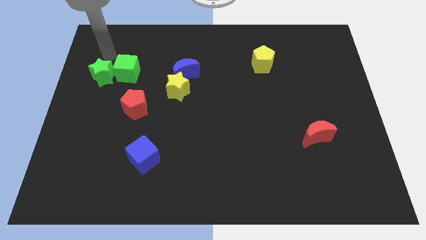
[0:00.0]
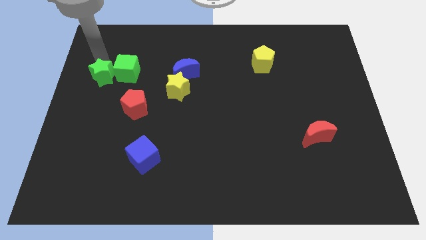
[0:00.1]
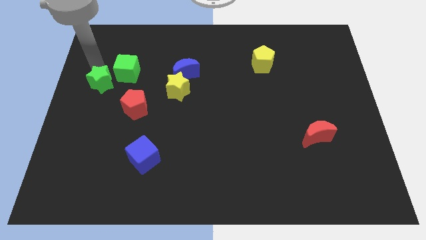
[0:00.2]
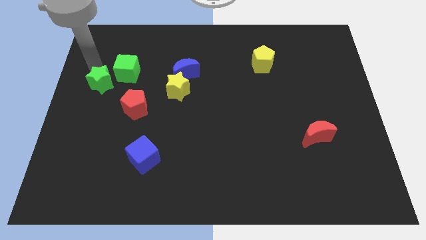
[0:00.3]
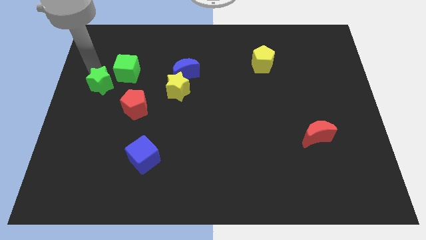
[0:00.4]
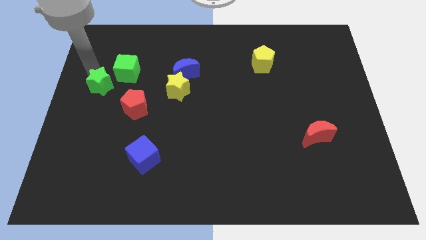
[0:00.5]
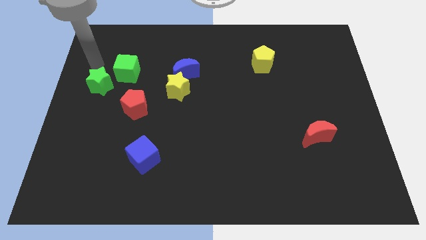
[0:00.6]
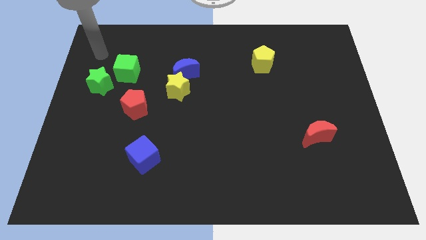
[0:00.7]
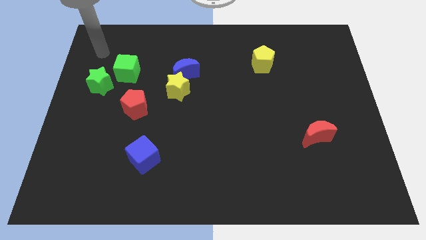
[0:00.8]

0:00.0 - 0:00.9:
push the green star away from the green cube

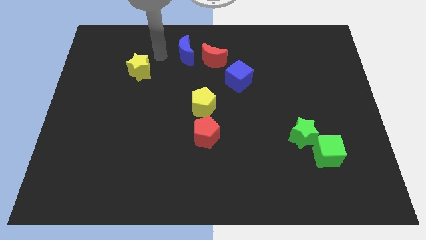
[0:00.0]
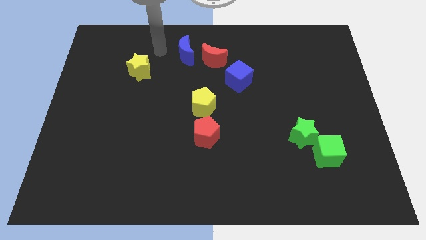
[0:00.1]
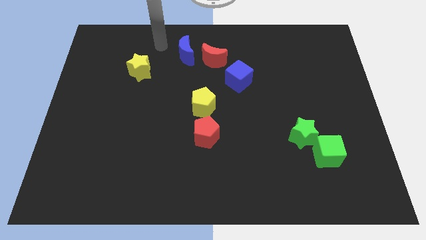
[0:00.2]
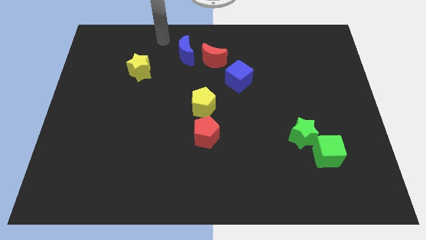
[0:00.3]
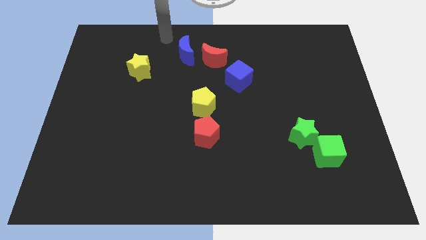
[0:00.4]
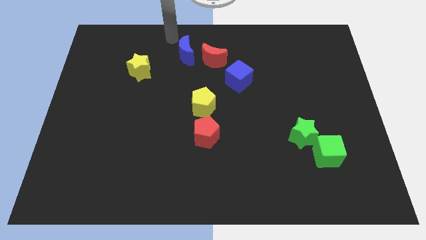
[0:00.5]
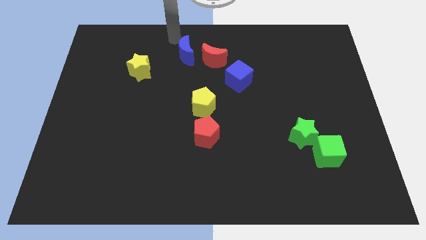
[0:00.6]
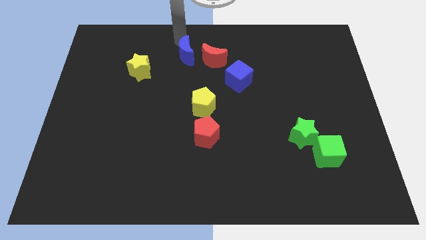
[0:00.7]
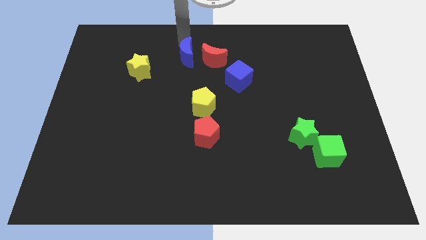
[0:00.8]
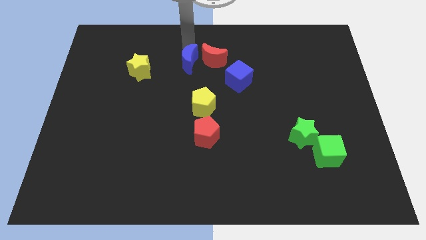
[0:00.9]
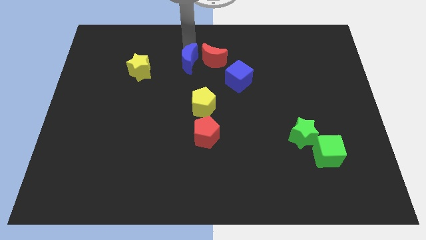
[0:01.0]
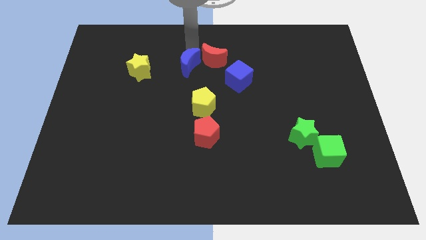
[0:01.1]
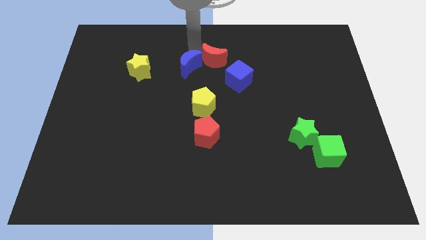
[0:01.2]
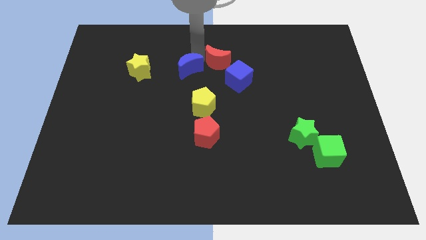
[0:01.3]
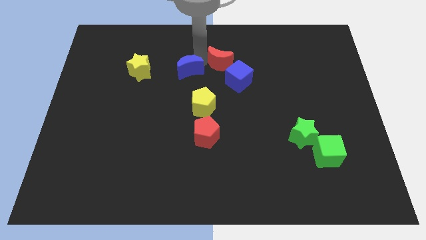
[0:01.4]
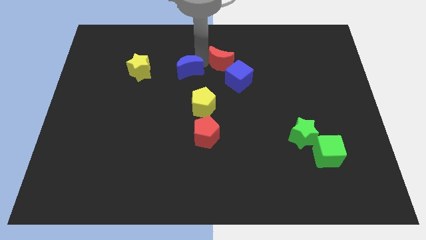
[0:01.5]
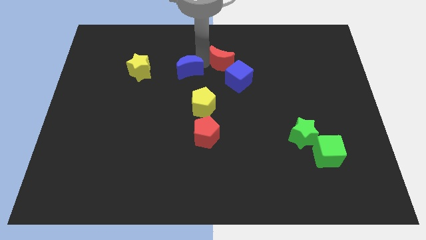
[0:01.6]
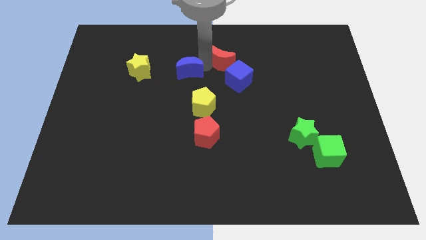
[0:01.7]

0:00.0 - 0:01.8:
move the blue crescent to the left of the red crescent

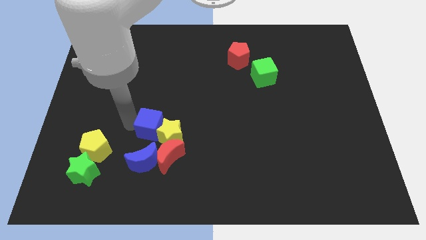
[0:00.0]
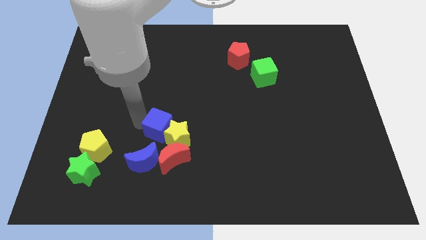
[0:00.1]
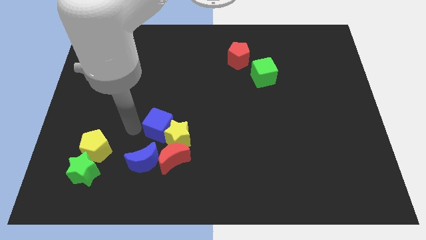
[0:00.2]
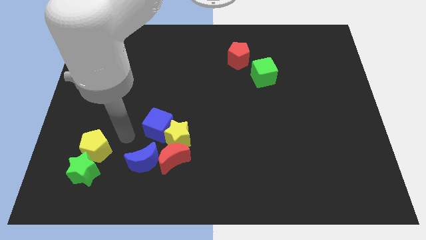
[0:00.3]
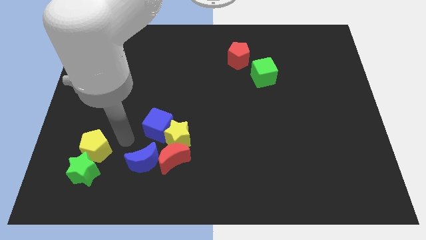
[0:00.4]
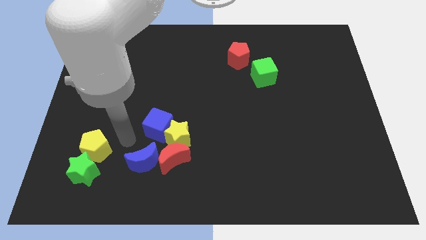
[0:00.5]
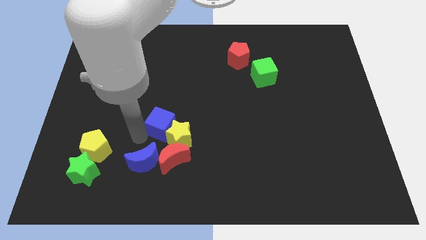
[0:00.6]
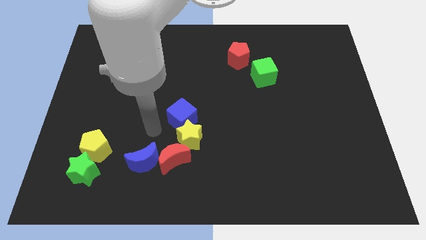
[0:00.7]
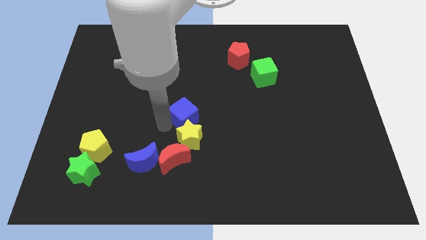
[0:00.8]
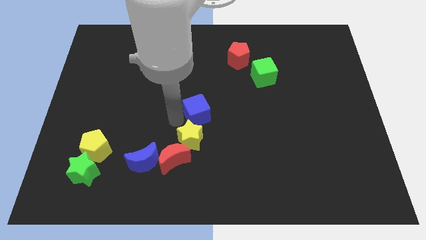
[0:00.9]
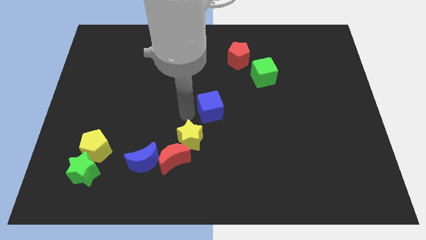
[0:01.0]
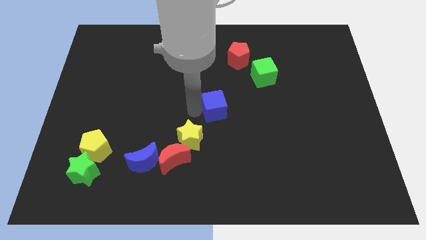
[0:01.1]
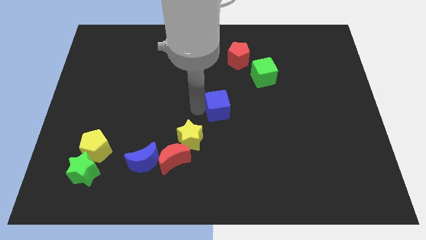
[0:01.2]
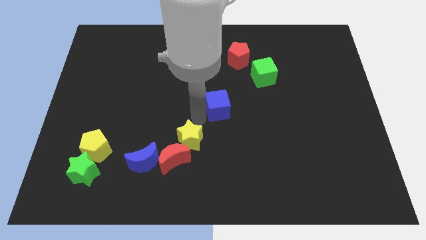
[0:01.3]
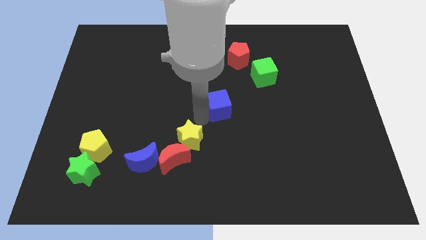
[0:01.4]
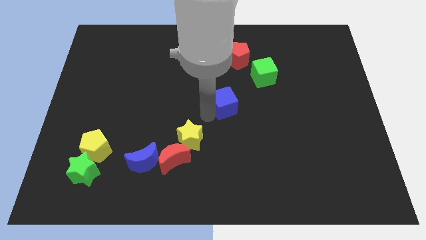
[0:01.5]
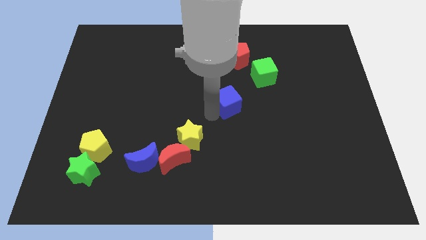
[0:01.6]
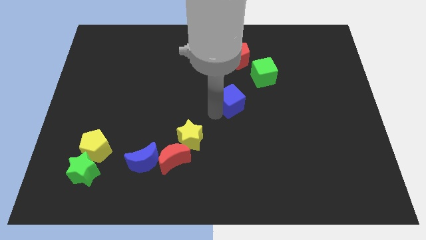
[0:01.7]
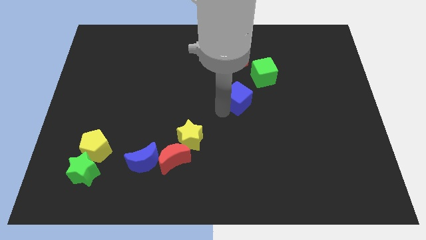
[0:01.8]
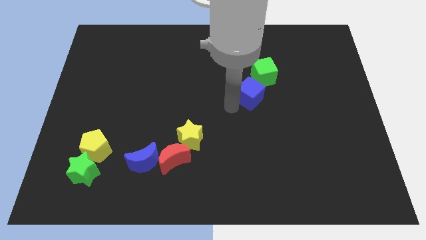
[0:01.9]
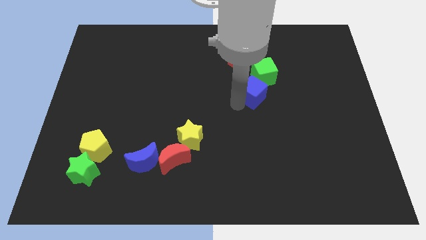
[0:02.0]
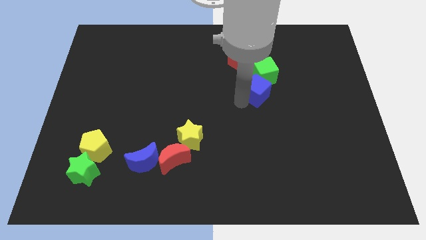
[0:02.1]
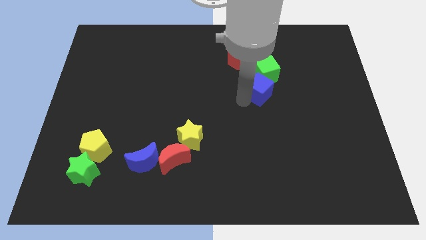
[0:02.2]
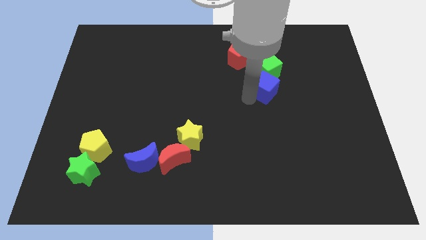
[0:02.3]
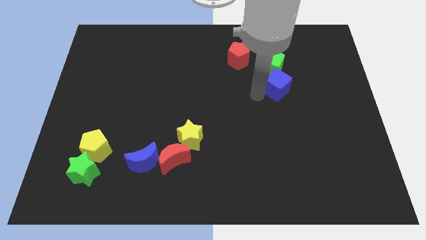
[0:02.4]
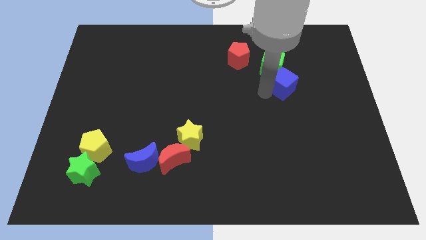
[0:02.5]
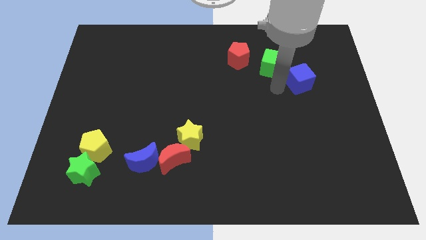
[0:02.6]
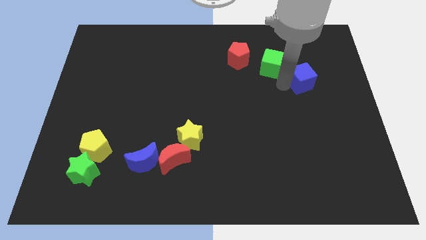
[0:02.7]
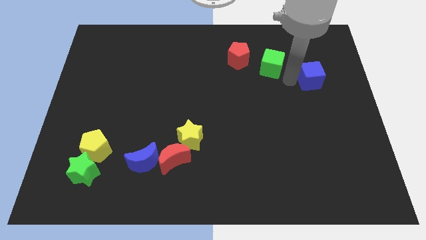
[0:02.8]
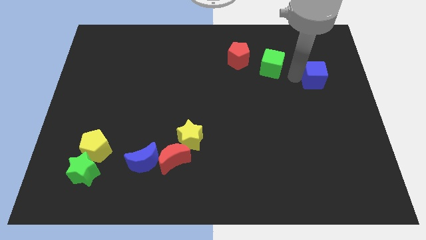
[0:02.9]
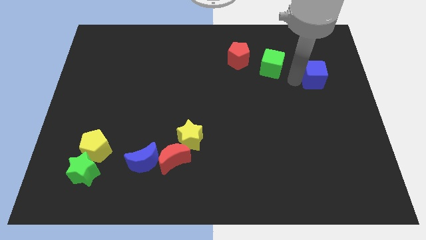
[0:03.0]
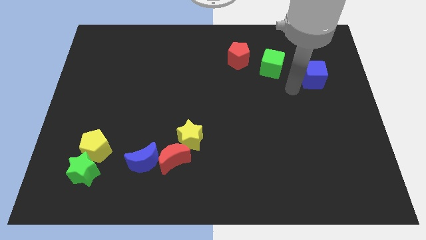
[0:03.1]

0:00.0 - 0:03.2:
move the blue cube to the rightg side of the green cube

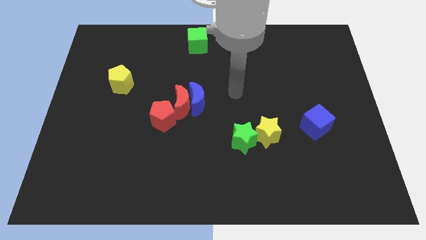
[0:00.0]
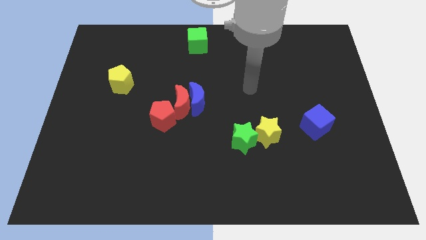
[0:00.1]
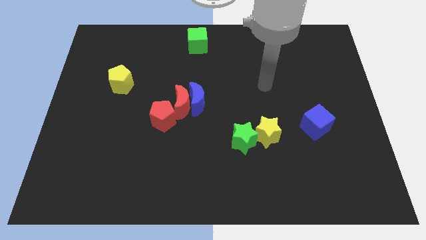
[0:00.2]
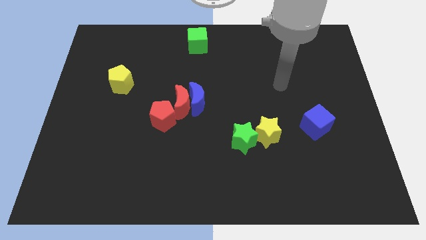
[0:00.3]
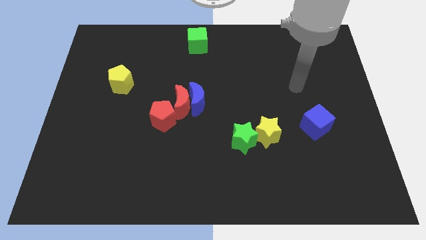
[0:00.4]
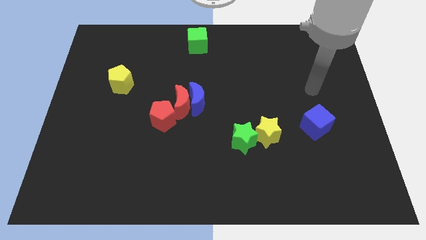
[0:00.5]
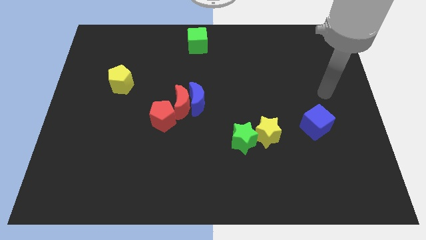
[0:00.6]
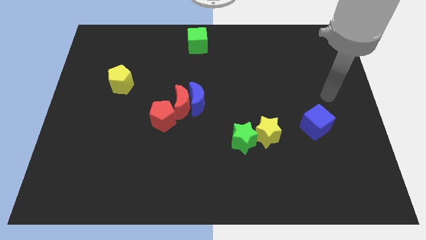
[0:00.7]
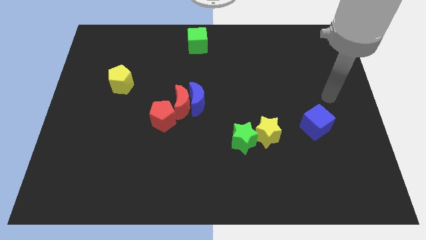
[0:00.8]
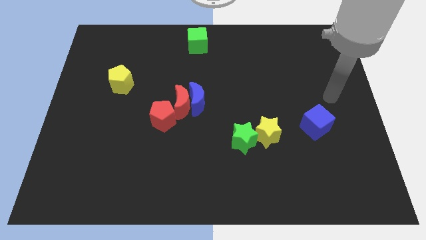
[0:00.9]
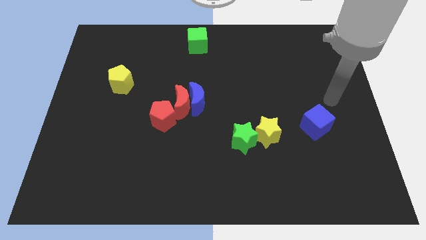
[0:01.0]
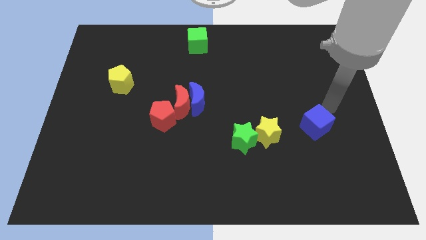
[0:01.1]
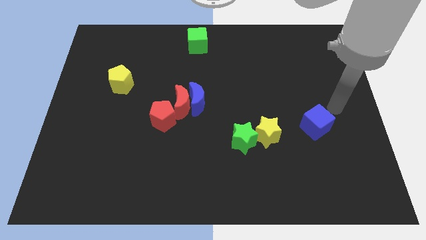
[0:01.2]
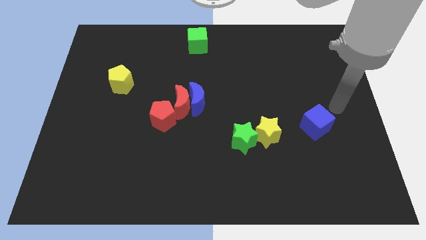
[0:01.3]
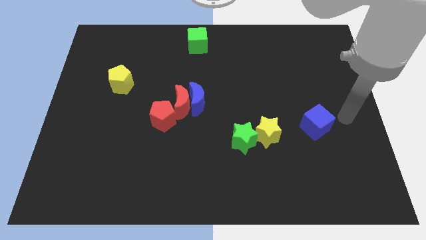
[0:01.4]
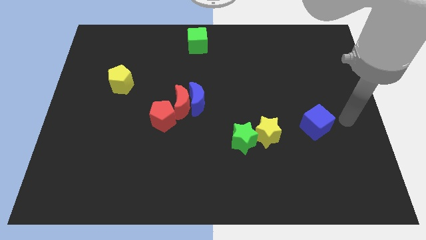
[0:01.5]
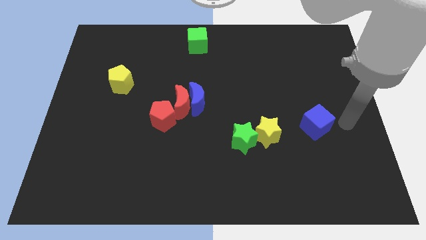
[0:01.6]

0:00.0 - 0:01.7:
place your hand at right side of the blue cube

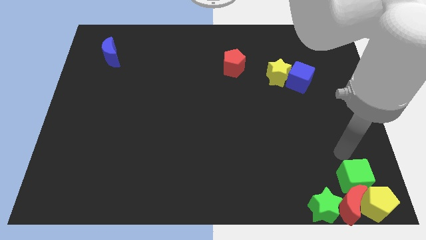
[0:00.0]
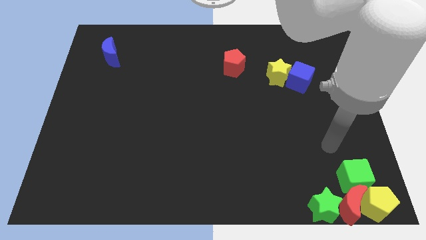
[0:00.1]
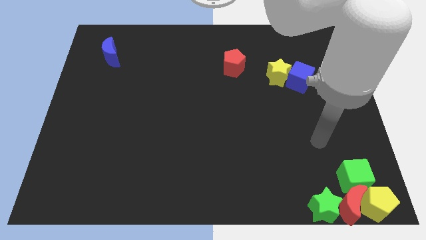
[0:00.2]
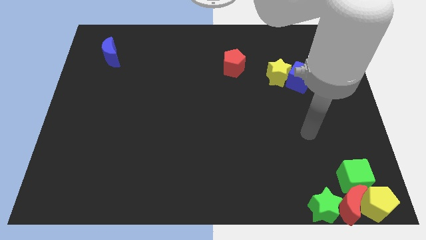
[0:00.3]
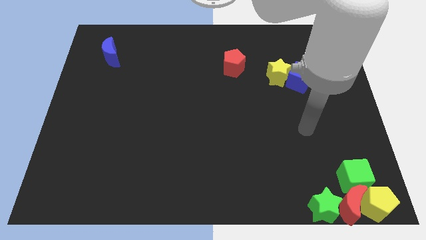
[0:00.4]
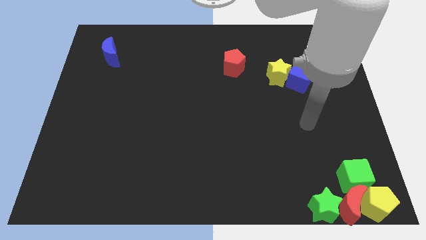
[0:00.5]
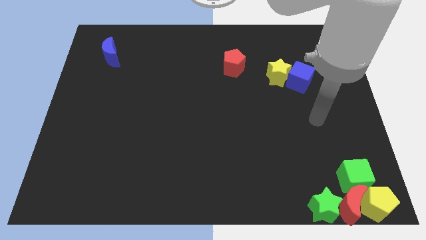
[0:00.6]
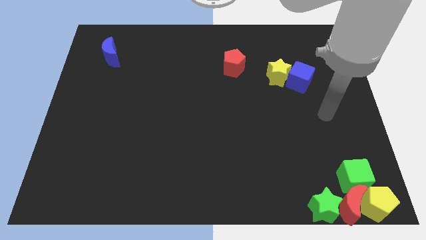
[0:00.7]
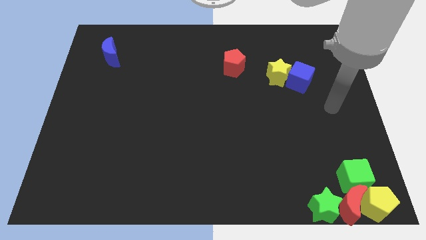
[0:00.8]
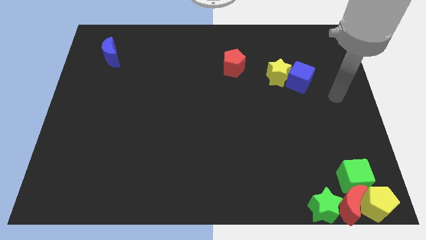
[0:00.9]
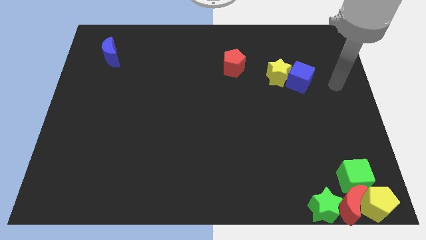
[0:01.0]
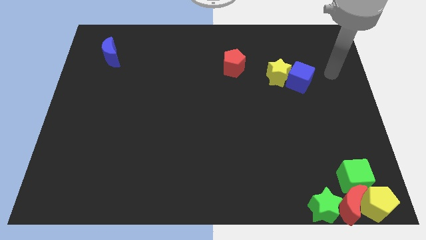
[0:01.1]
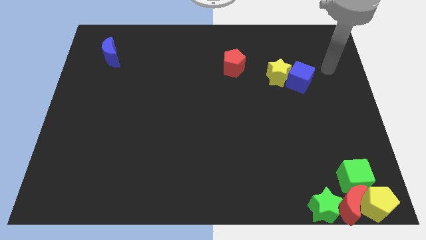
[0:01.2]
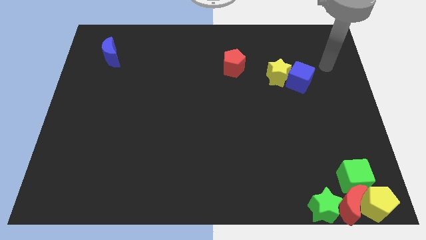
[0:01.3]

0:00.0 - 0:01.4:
point the arm to the top right of the blue cube
